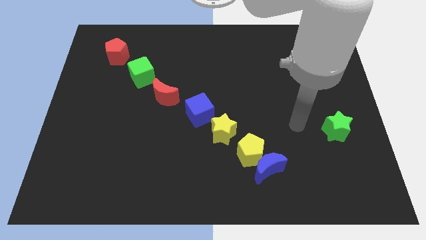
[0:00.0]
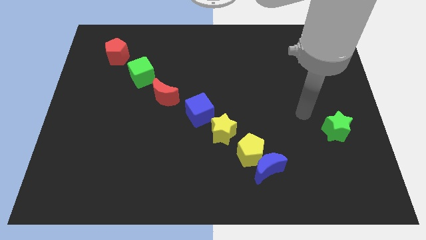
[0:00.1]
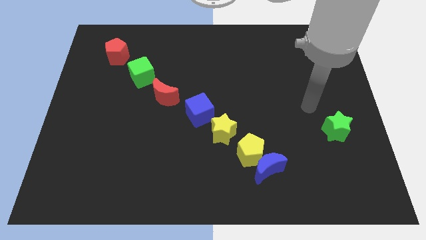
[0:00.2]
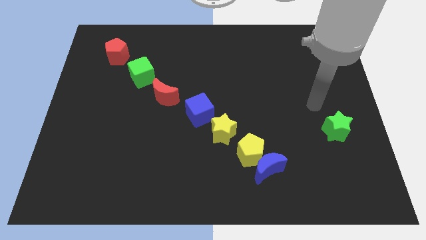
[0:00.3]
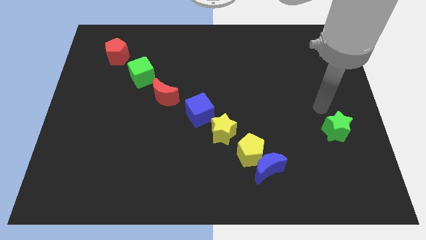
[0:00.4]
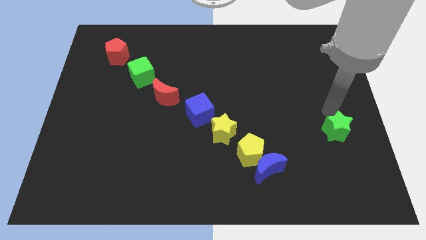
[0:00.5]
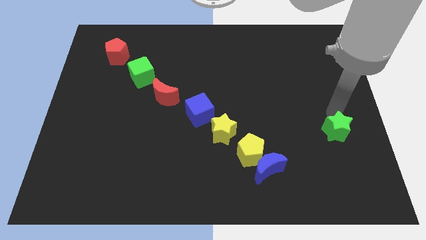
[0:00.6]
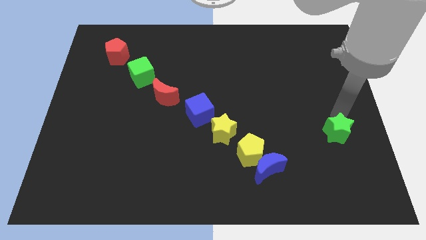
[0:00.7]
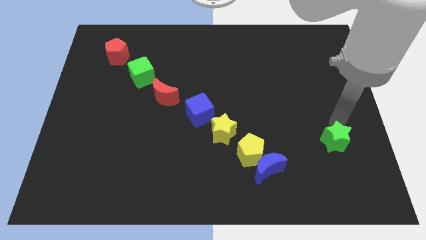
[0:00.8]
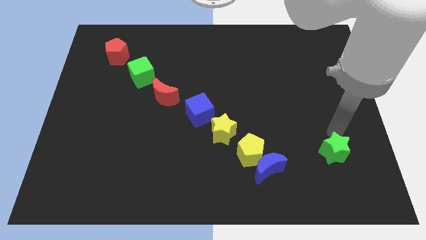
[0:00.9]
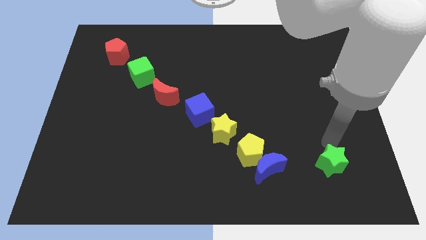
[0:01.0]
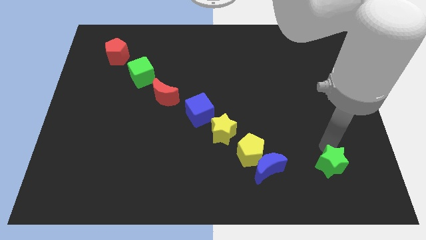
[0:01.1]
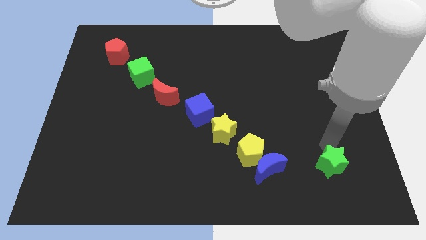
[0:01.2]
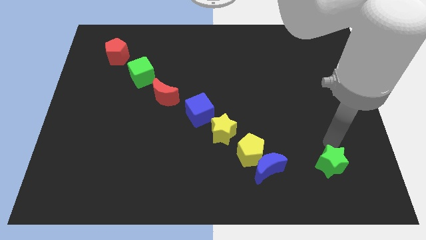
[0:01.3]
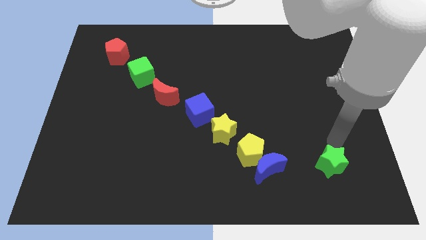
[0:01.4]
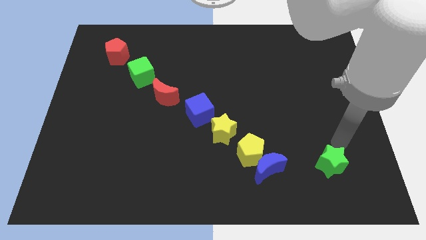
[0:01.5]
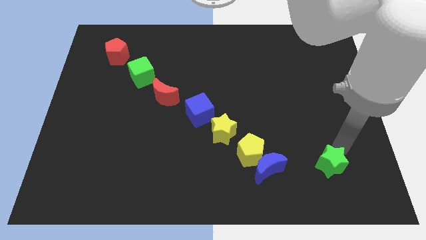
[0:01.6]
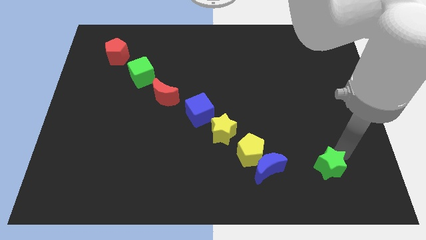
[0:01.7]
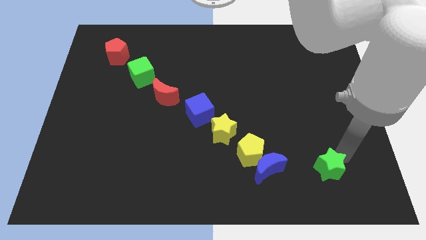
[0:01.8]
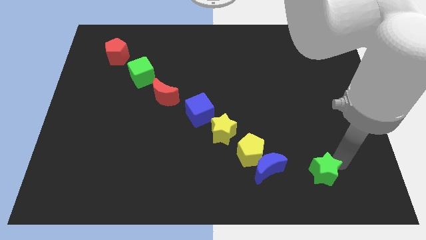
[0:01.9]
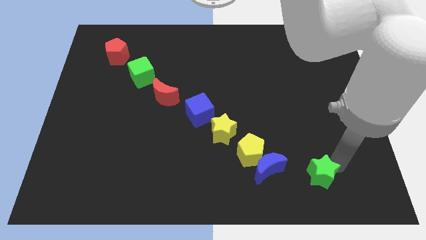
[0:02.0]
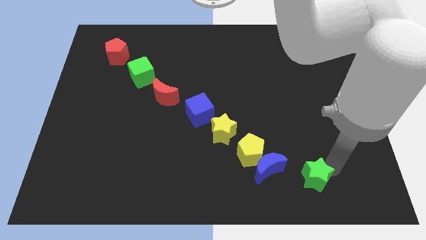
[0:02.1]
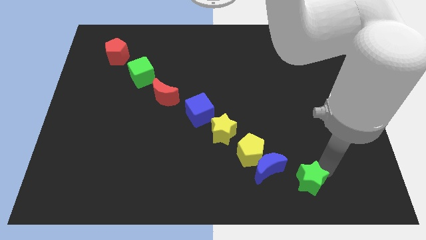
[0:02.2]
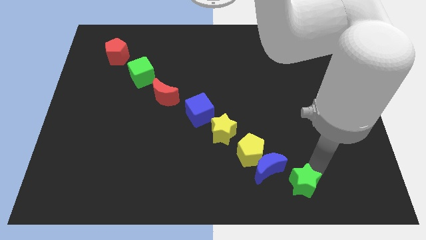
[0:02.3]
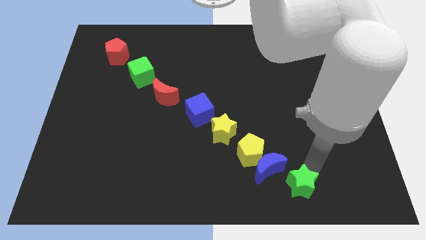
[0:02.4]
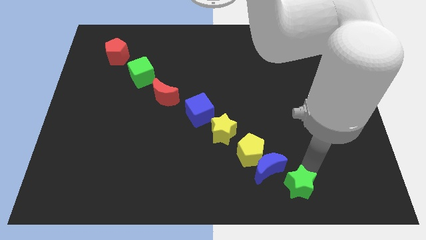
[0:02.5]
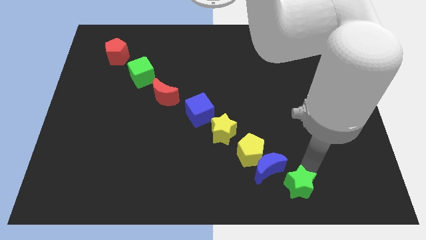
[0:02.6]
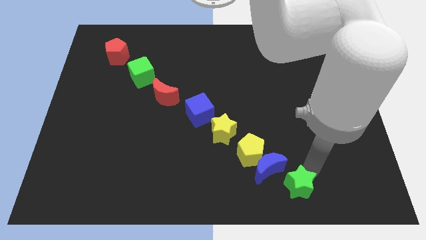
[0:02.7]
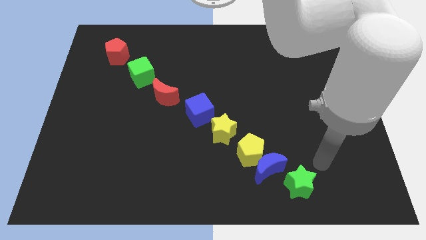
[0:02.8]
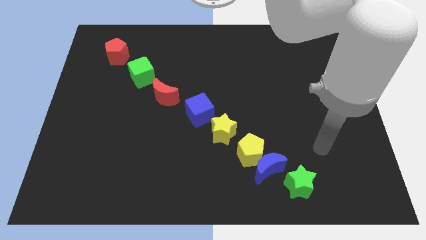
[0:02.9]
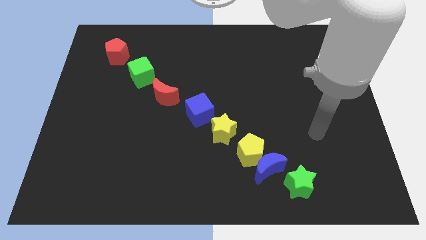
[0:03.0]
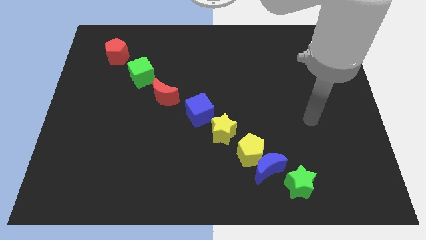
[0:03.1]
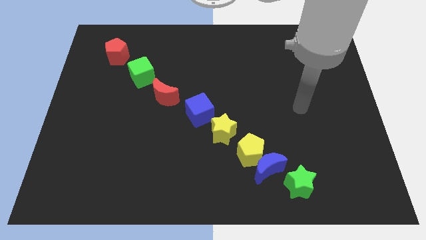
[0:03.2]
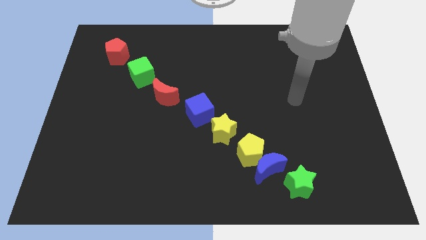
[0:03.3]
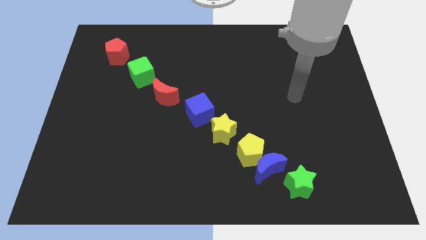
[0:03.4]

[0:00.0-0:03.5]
move the green star to the bottom side of the diagonal line of group of blocks

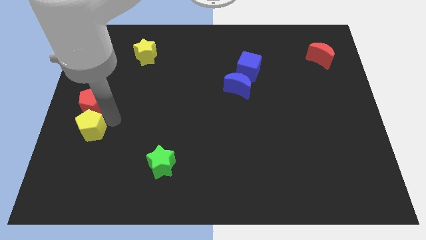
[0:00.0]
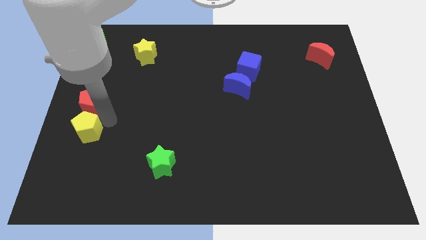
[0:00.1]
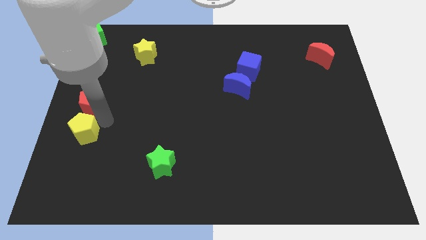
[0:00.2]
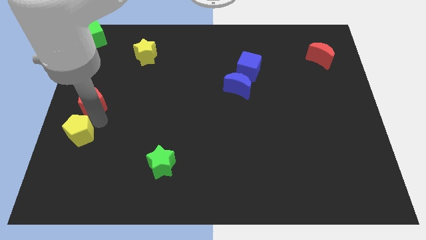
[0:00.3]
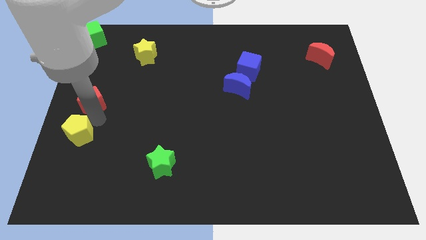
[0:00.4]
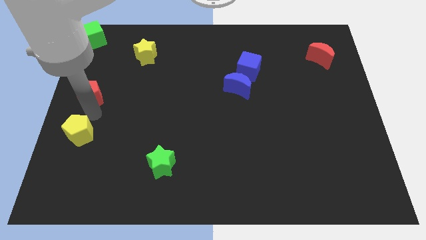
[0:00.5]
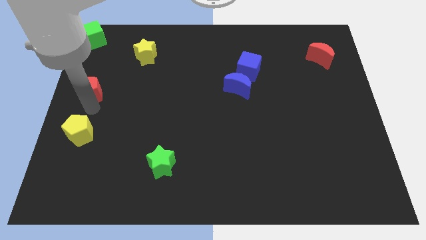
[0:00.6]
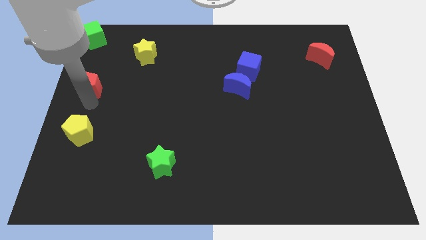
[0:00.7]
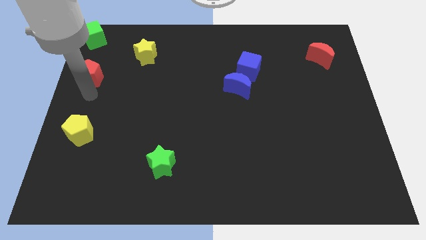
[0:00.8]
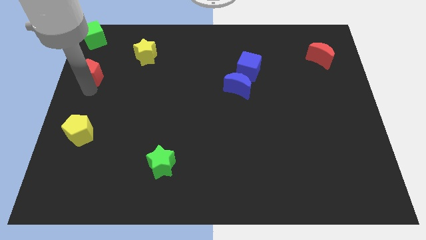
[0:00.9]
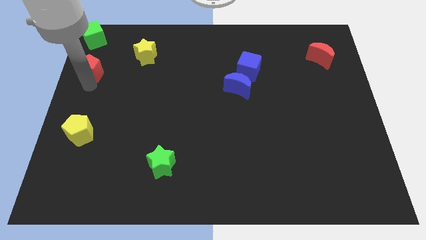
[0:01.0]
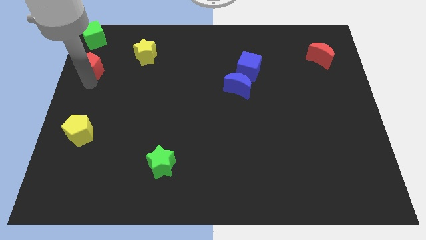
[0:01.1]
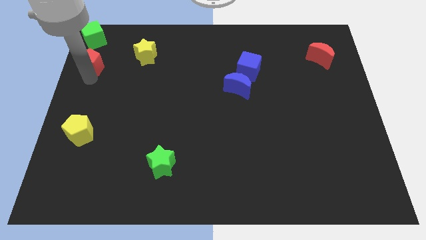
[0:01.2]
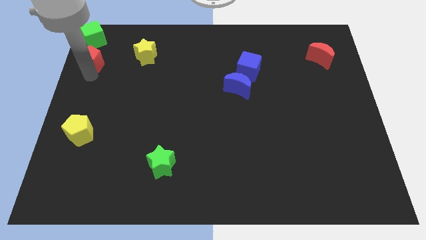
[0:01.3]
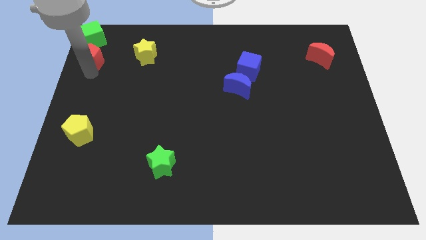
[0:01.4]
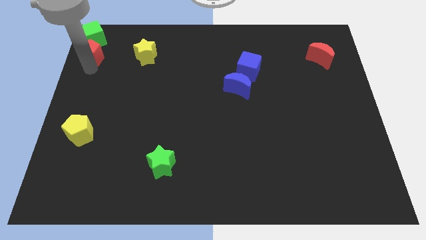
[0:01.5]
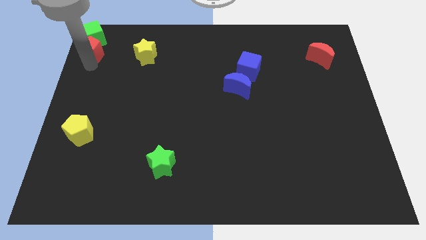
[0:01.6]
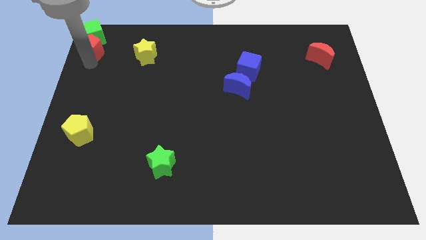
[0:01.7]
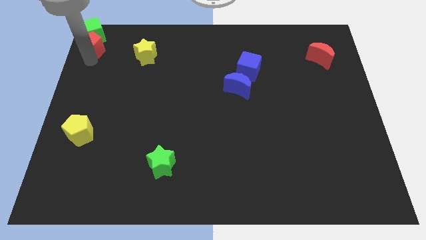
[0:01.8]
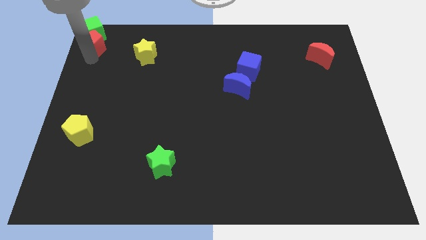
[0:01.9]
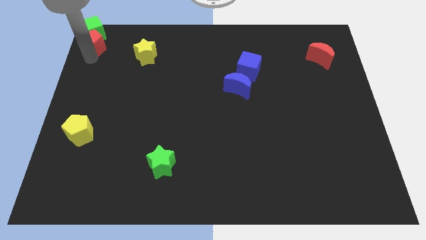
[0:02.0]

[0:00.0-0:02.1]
move the red pentagon below into the green cube

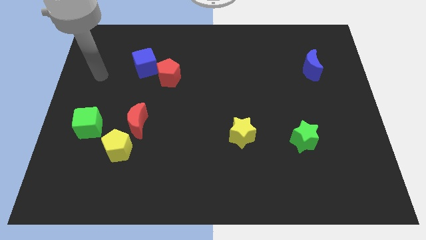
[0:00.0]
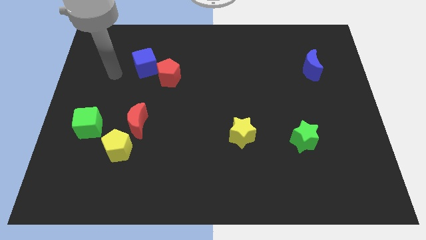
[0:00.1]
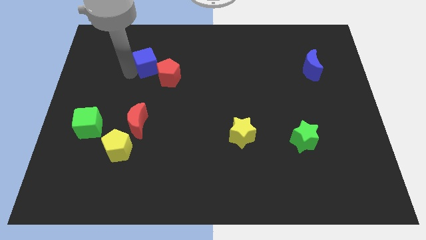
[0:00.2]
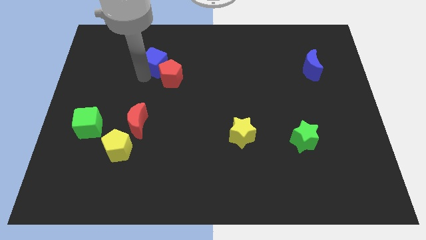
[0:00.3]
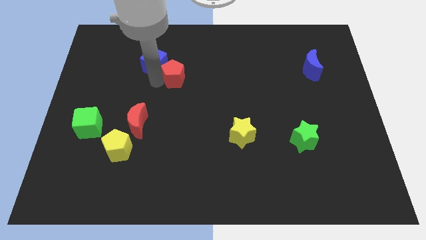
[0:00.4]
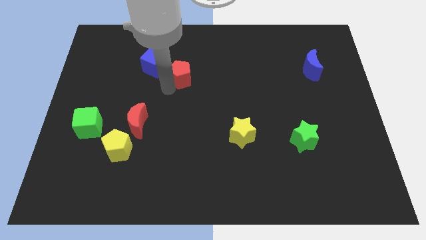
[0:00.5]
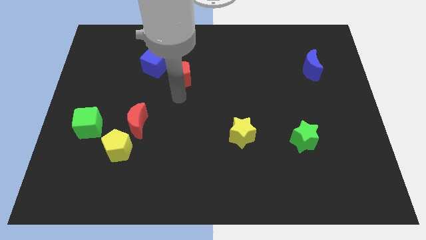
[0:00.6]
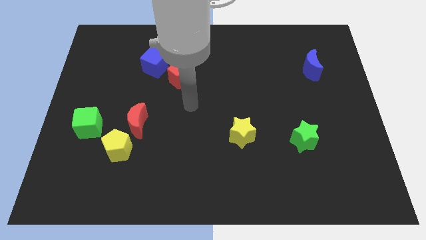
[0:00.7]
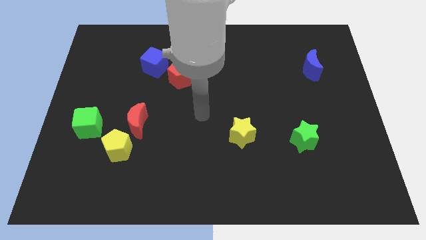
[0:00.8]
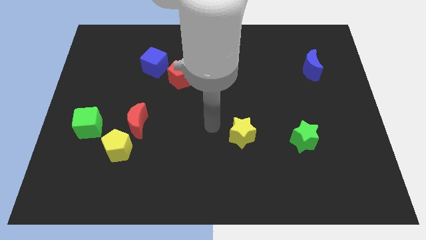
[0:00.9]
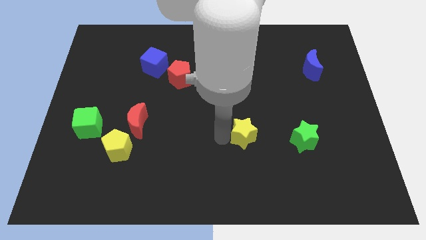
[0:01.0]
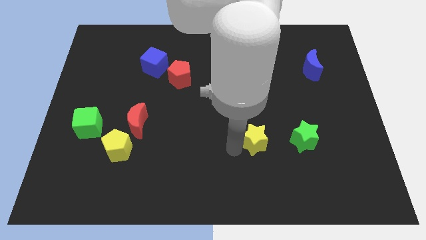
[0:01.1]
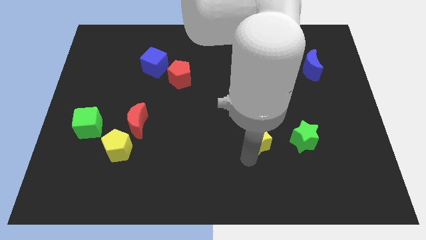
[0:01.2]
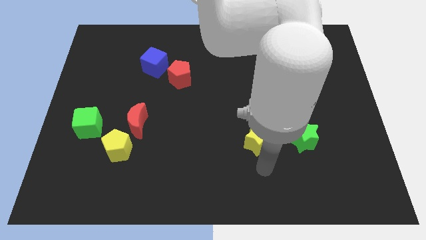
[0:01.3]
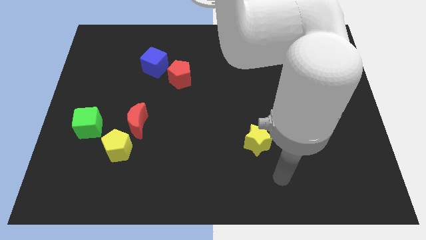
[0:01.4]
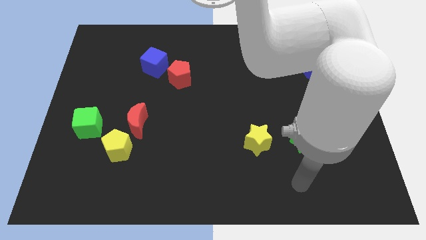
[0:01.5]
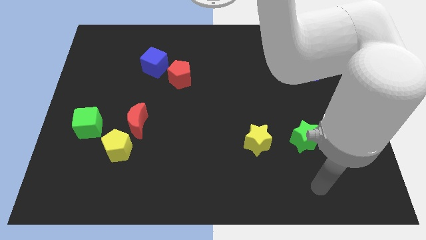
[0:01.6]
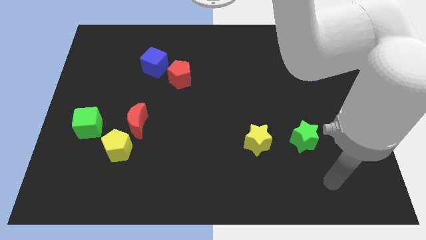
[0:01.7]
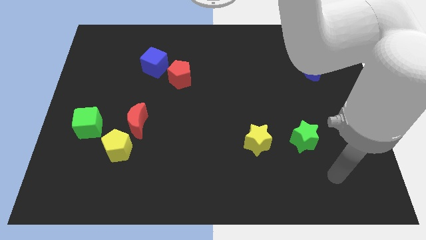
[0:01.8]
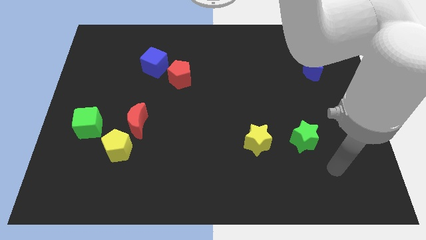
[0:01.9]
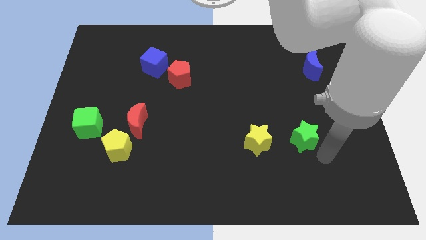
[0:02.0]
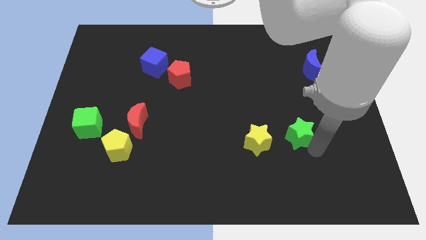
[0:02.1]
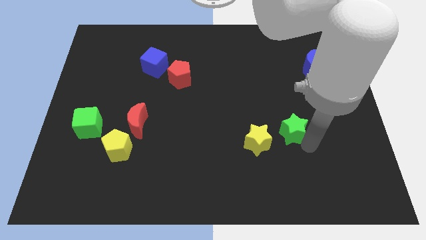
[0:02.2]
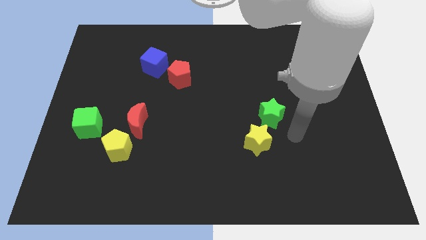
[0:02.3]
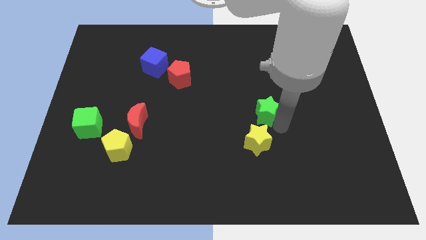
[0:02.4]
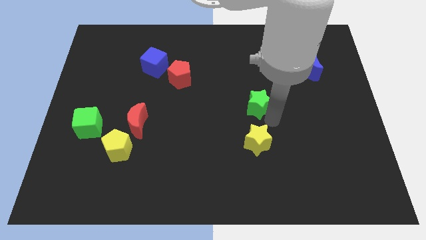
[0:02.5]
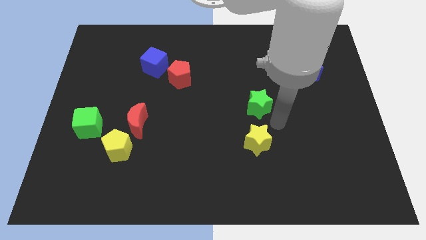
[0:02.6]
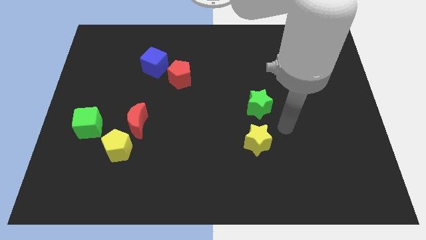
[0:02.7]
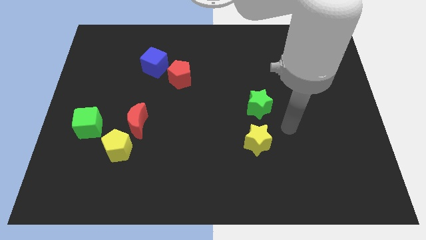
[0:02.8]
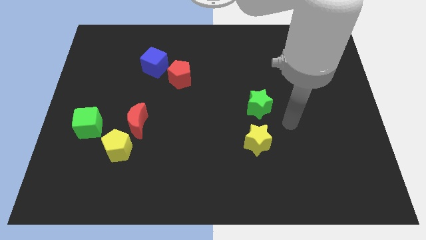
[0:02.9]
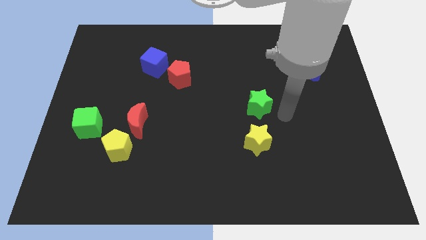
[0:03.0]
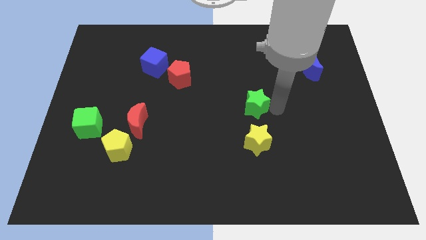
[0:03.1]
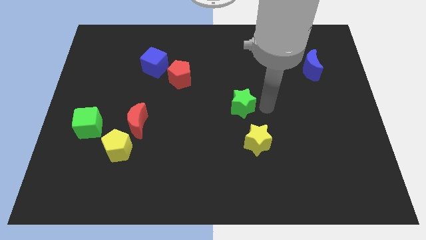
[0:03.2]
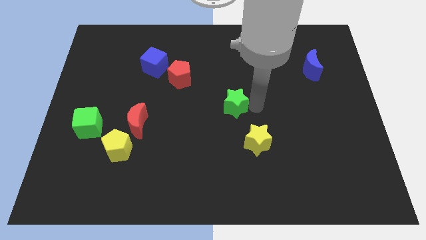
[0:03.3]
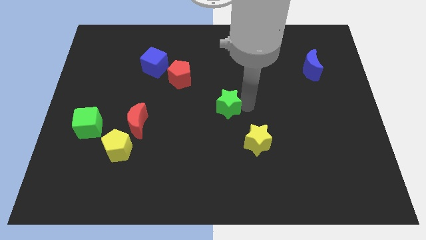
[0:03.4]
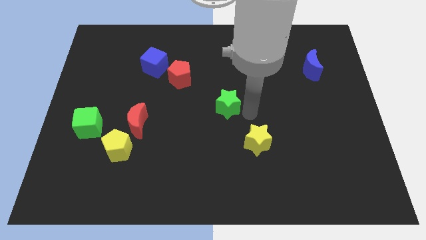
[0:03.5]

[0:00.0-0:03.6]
move the green star to the center
